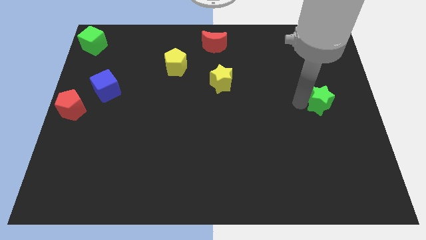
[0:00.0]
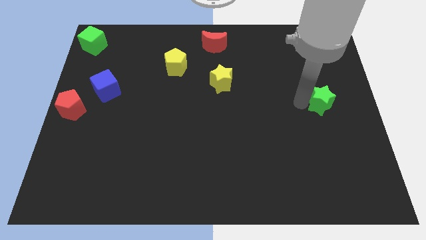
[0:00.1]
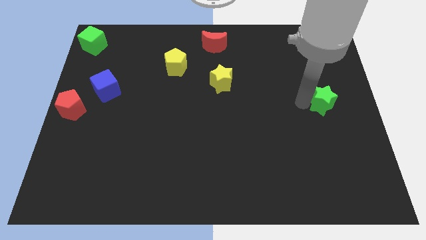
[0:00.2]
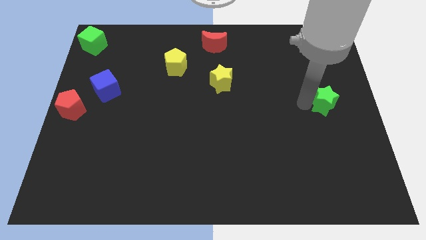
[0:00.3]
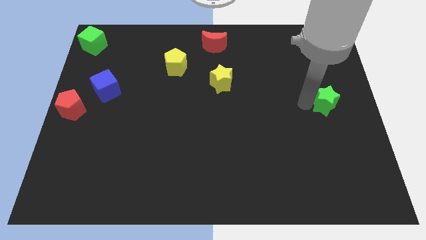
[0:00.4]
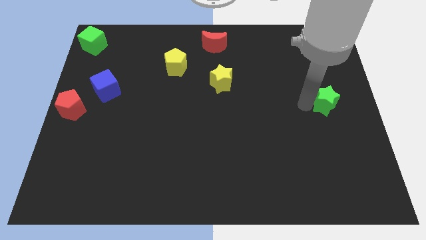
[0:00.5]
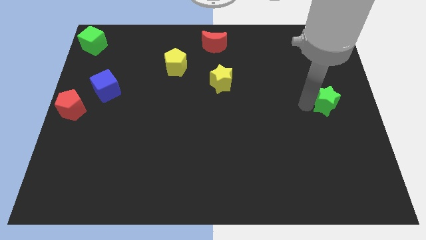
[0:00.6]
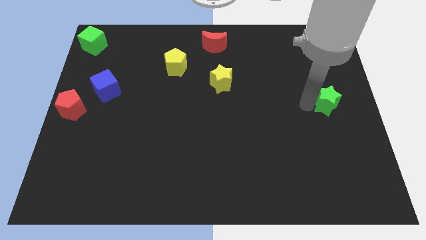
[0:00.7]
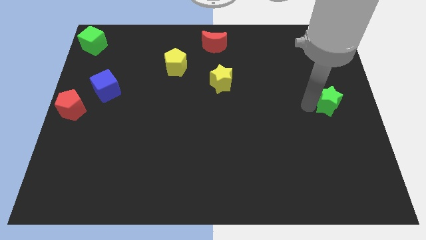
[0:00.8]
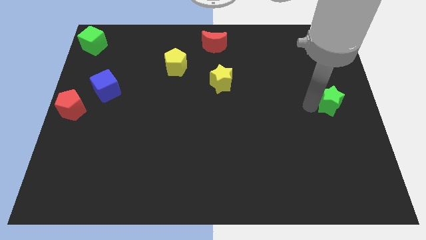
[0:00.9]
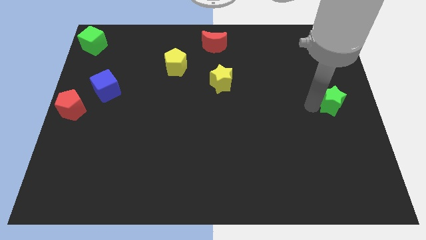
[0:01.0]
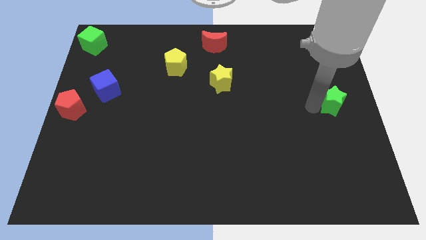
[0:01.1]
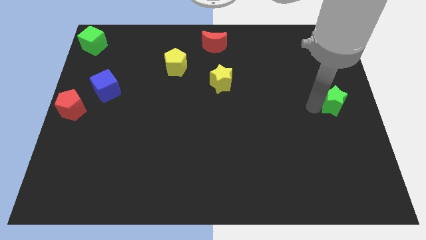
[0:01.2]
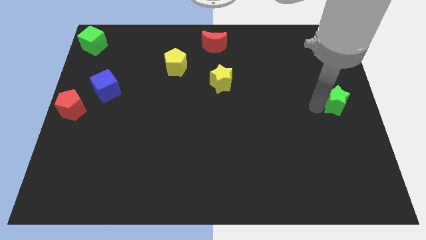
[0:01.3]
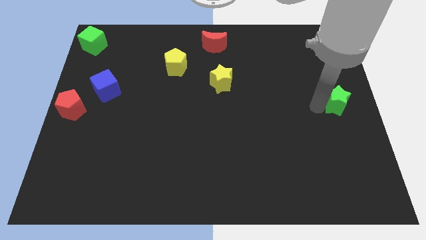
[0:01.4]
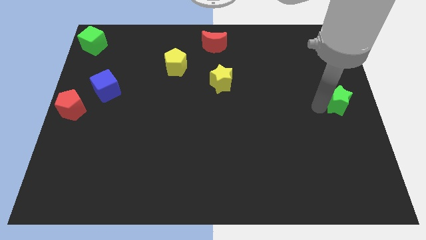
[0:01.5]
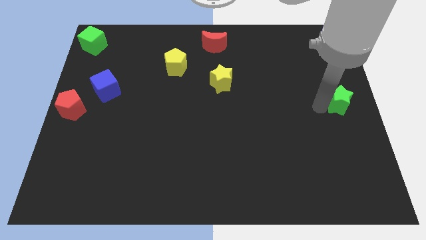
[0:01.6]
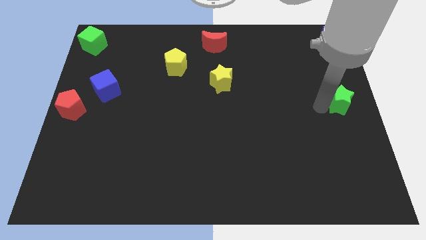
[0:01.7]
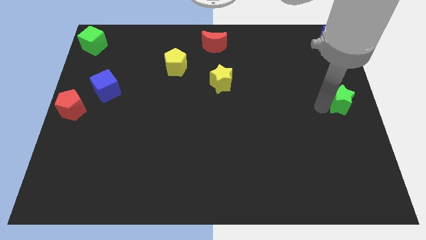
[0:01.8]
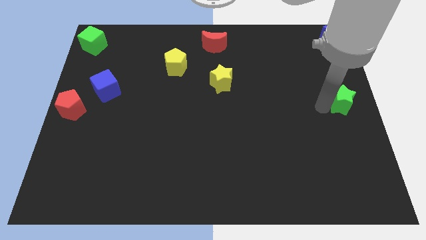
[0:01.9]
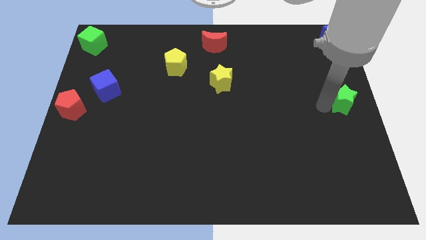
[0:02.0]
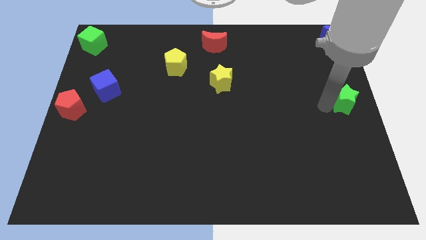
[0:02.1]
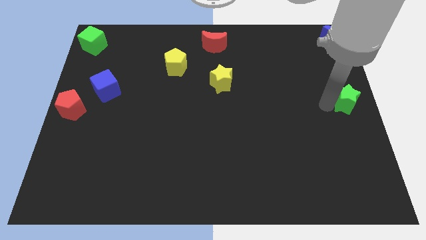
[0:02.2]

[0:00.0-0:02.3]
move the green star towards the center right of the board

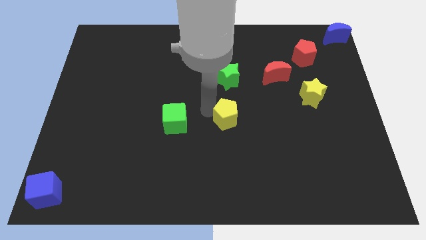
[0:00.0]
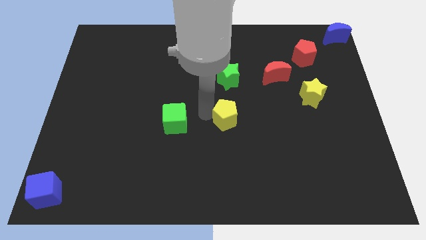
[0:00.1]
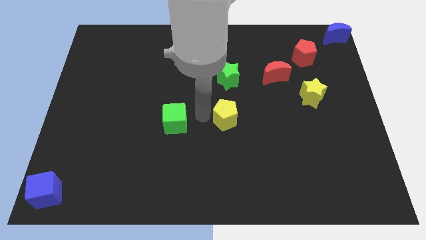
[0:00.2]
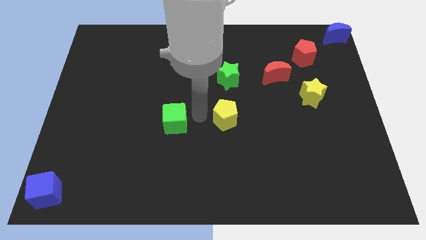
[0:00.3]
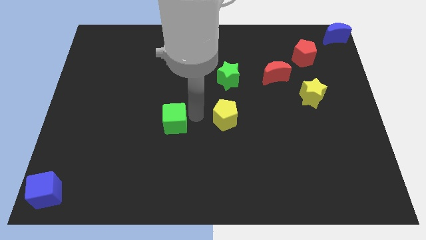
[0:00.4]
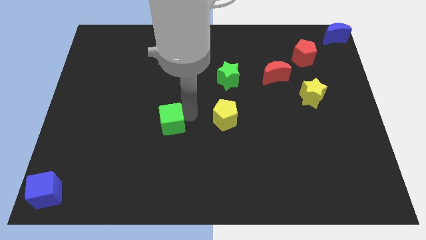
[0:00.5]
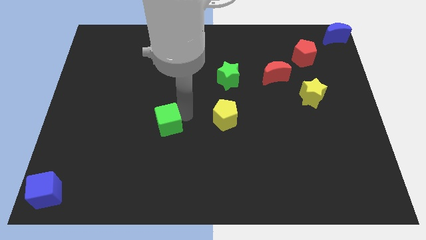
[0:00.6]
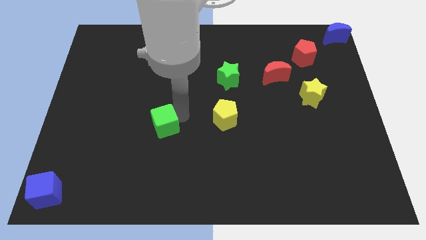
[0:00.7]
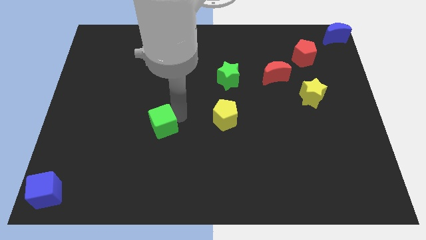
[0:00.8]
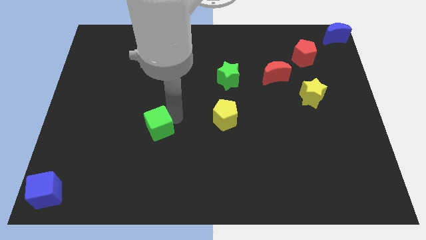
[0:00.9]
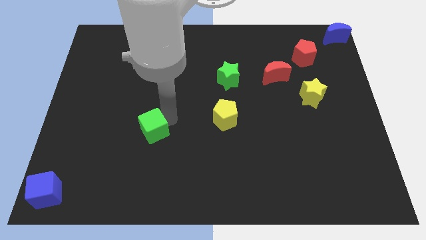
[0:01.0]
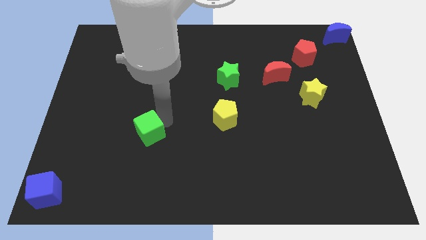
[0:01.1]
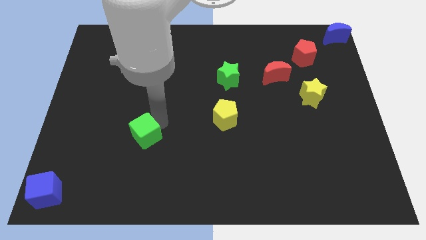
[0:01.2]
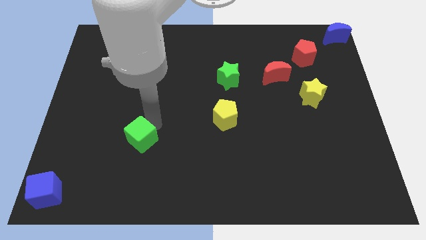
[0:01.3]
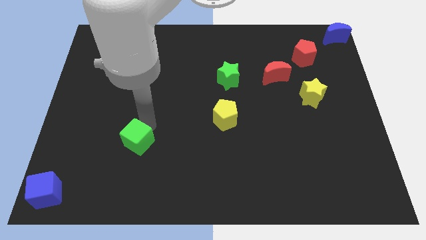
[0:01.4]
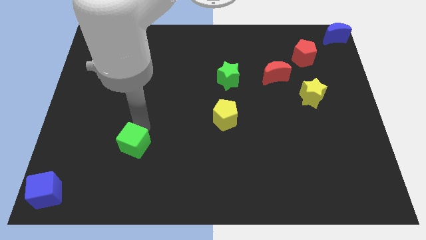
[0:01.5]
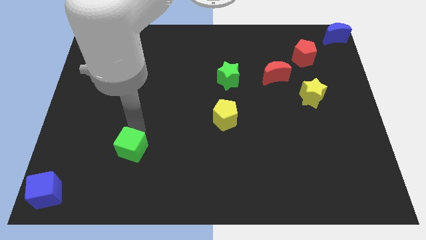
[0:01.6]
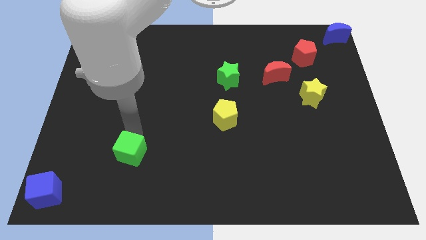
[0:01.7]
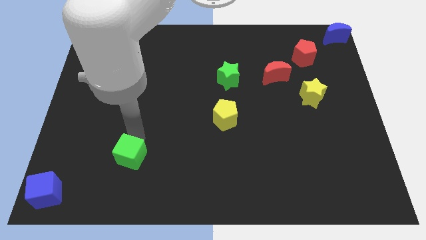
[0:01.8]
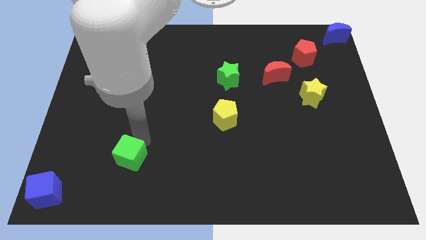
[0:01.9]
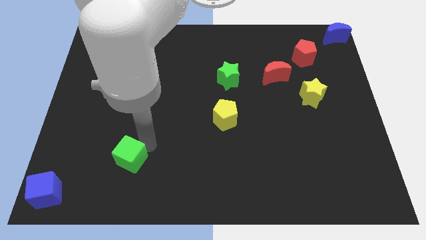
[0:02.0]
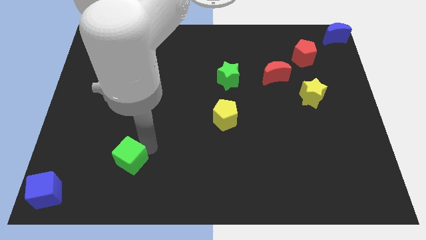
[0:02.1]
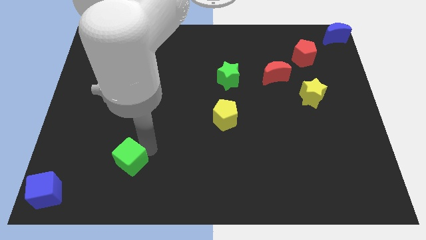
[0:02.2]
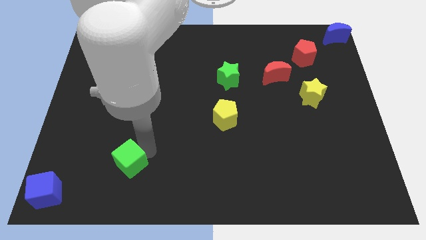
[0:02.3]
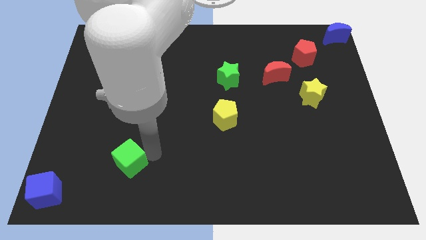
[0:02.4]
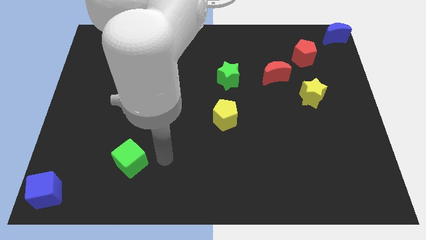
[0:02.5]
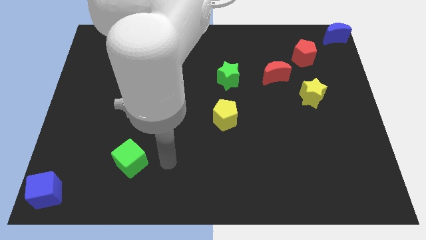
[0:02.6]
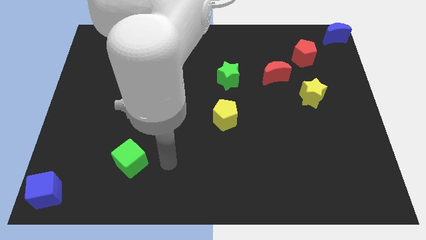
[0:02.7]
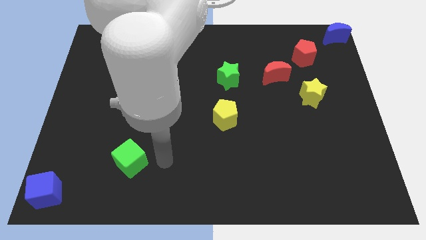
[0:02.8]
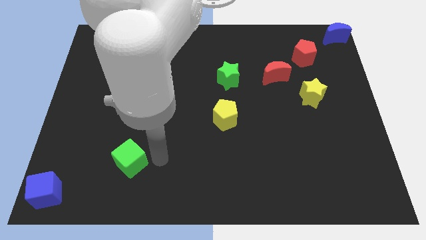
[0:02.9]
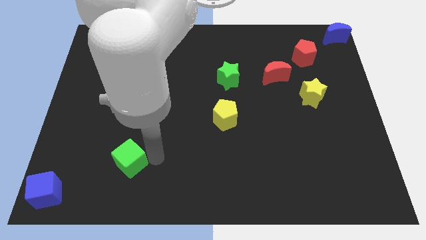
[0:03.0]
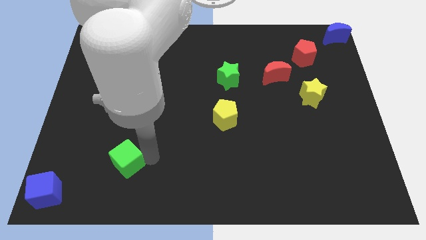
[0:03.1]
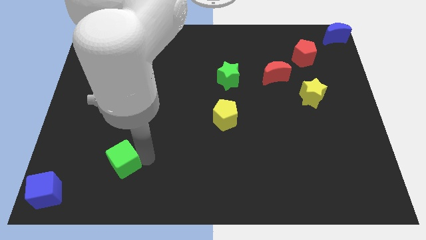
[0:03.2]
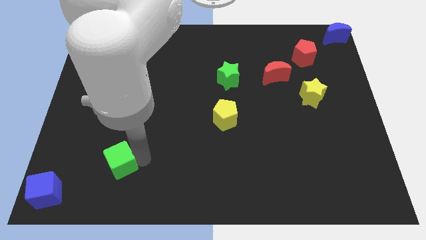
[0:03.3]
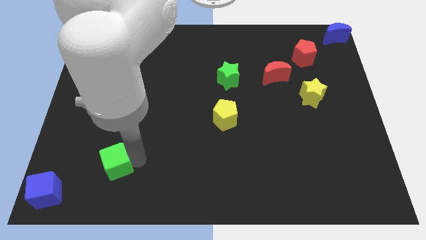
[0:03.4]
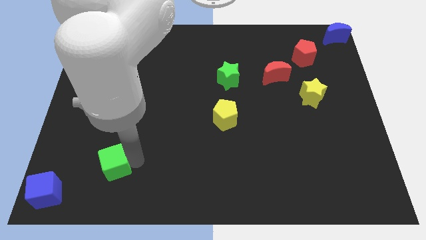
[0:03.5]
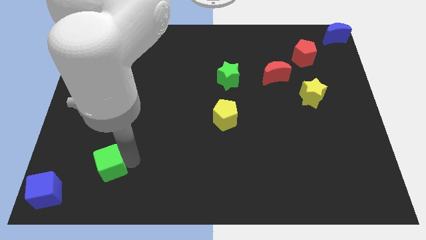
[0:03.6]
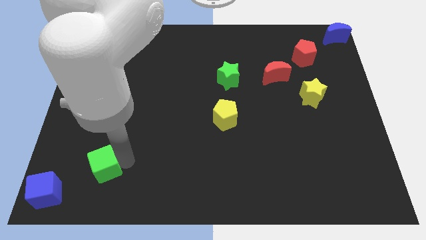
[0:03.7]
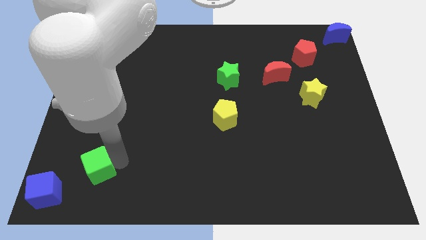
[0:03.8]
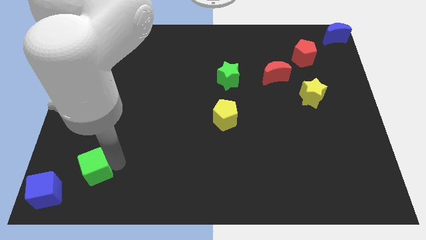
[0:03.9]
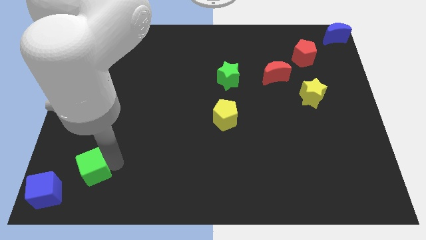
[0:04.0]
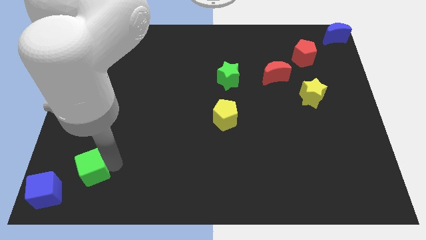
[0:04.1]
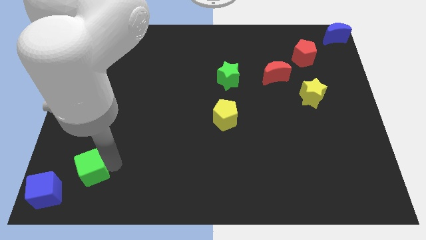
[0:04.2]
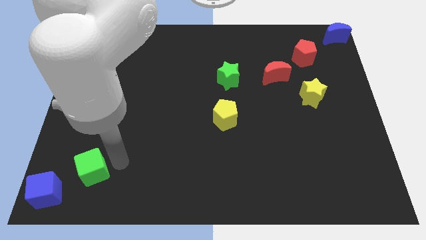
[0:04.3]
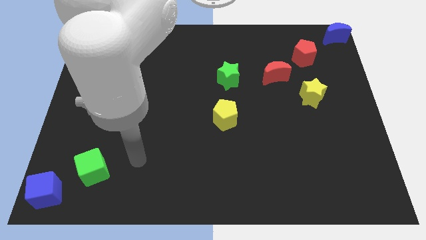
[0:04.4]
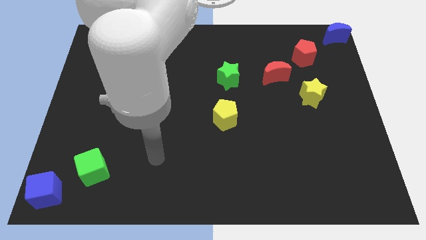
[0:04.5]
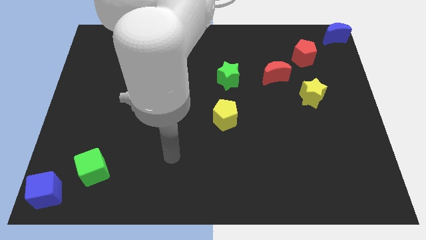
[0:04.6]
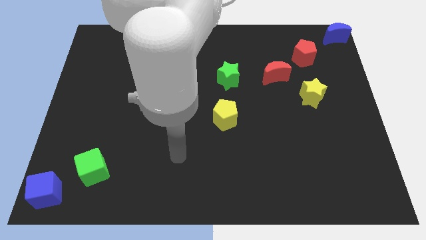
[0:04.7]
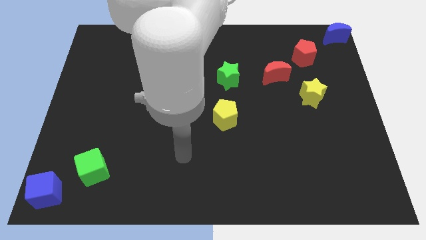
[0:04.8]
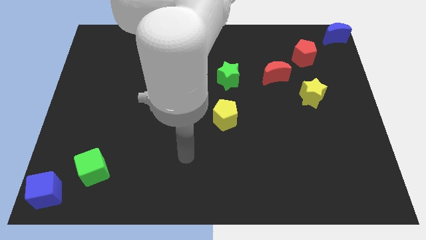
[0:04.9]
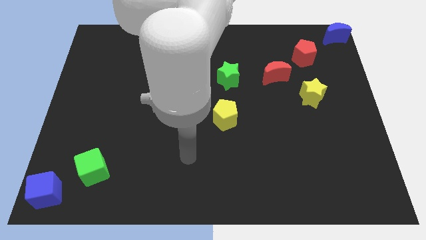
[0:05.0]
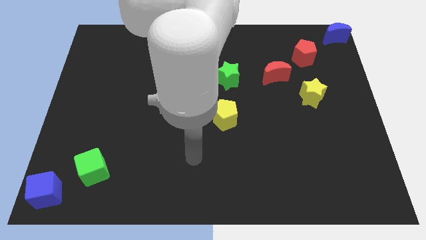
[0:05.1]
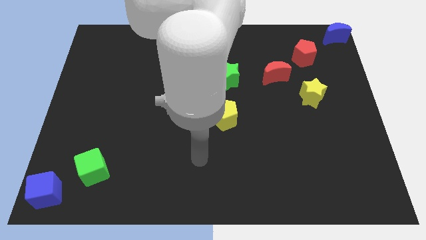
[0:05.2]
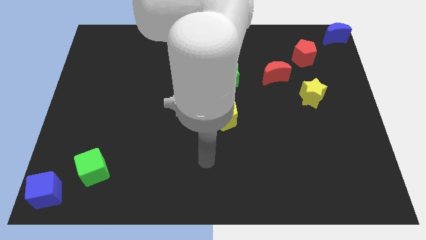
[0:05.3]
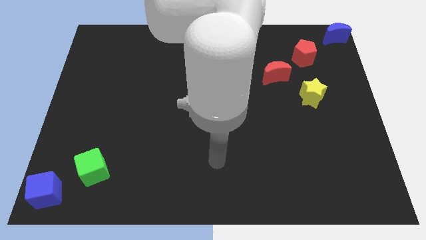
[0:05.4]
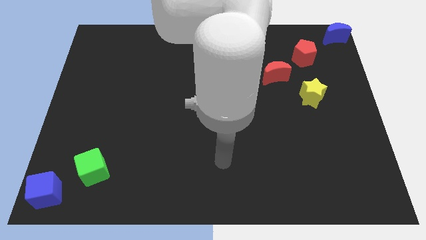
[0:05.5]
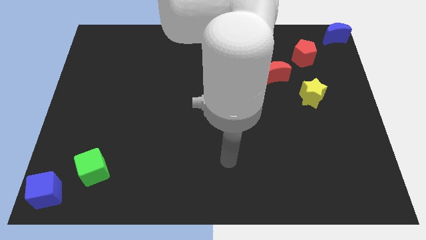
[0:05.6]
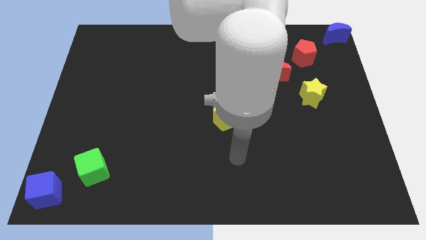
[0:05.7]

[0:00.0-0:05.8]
place green cube near blue cube

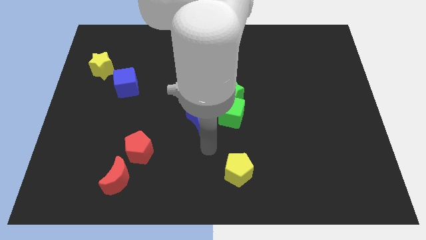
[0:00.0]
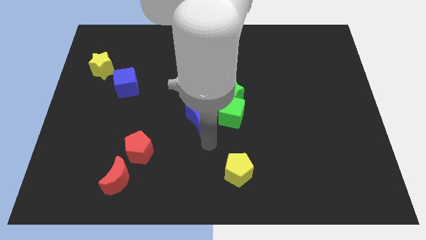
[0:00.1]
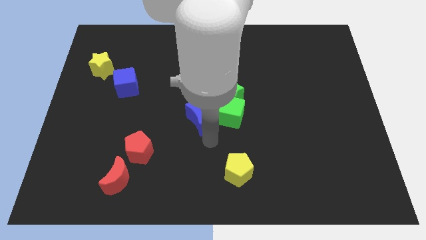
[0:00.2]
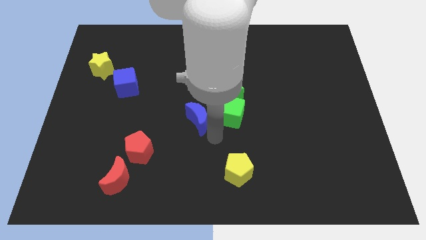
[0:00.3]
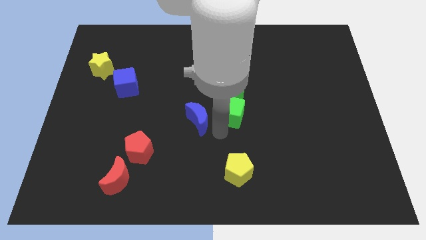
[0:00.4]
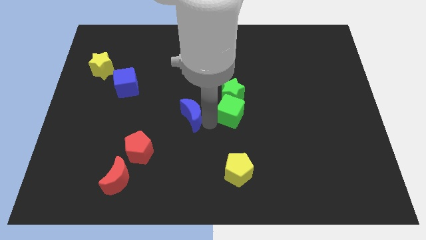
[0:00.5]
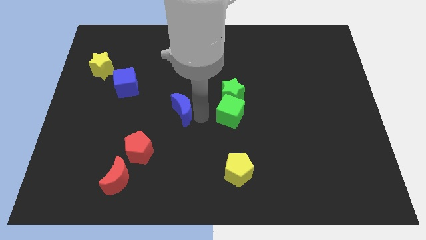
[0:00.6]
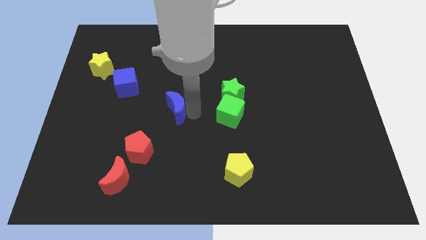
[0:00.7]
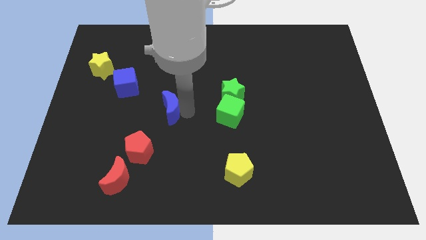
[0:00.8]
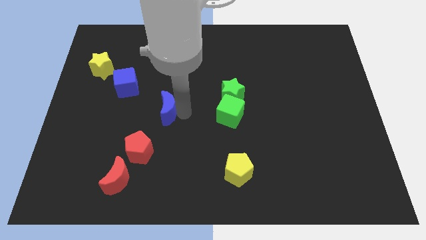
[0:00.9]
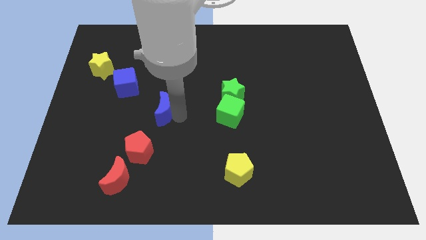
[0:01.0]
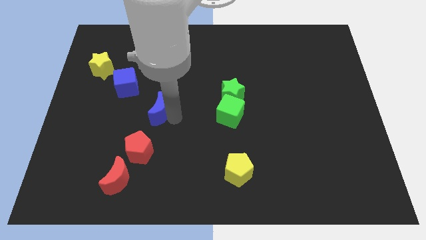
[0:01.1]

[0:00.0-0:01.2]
push the blue crescent towards the left of the board
